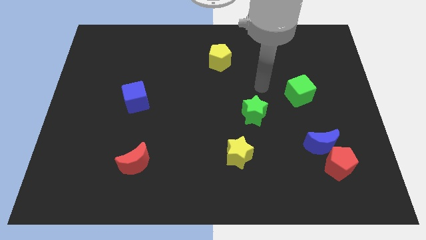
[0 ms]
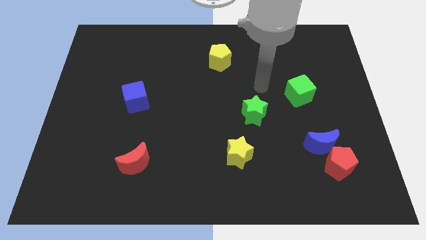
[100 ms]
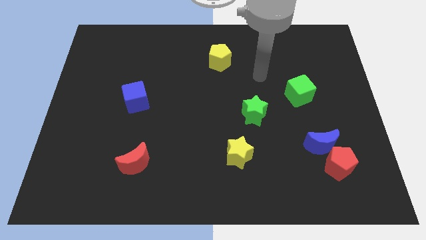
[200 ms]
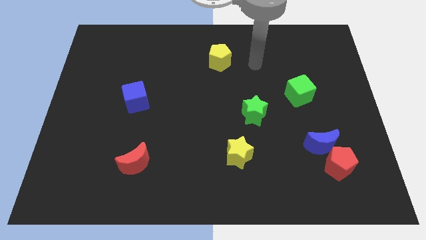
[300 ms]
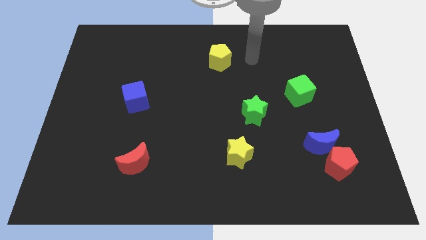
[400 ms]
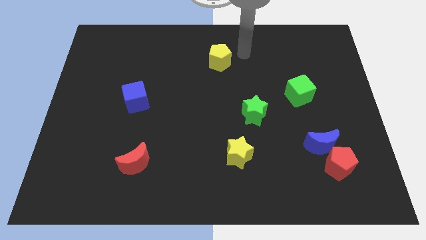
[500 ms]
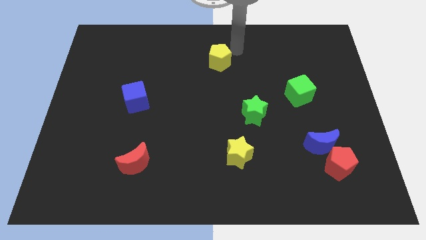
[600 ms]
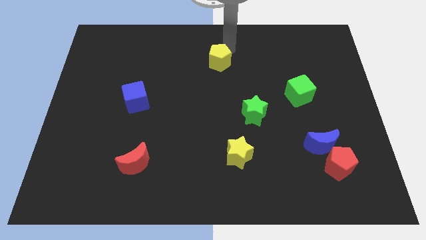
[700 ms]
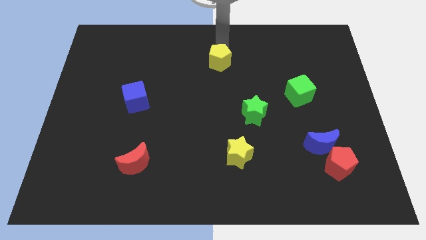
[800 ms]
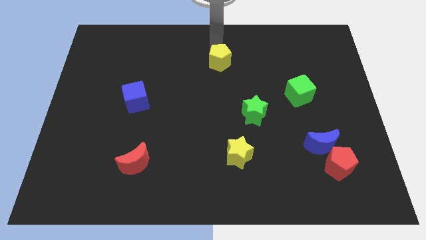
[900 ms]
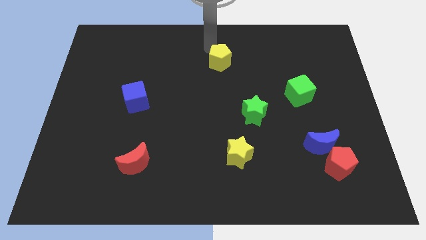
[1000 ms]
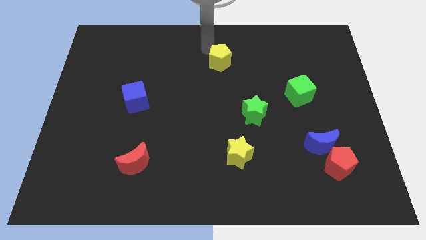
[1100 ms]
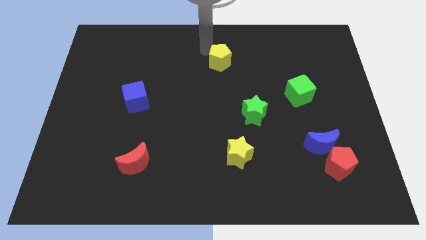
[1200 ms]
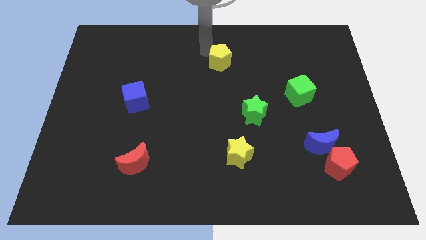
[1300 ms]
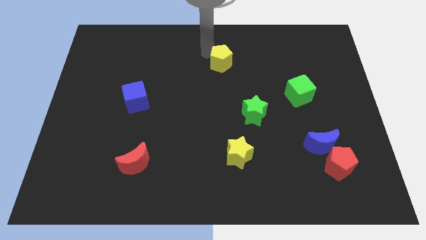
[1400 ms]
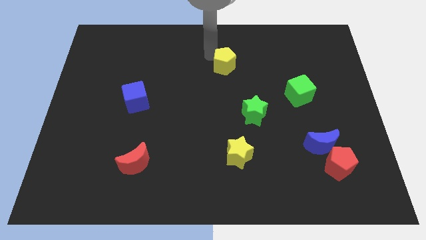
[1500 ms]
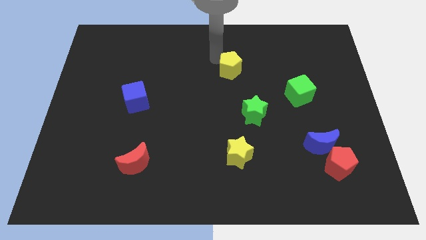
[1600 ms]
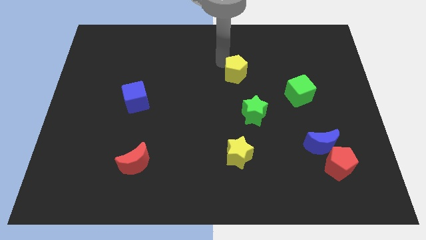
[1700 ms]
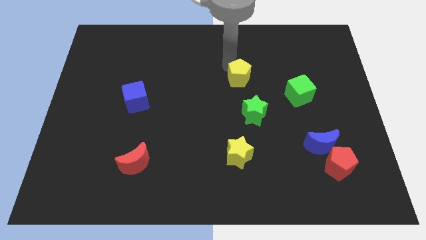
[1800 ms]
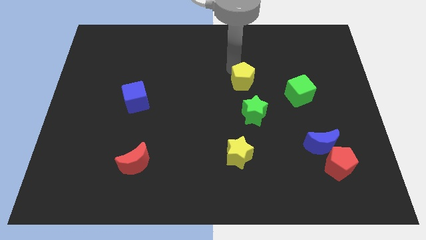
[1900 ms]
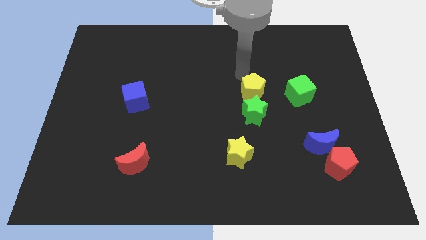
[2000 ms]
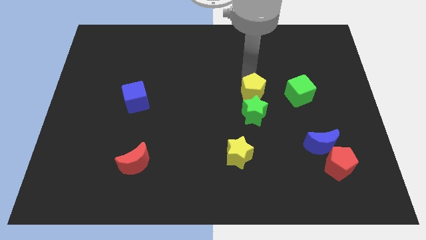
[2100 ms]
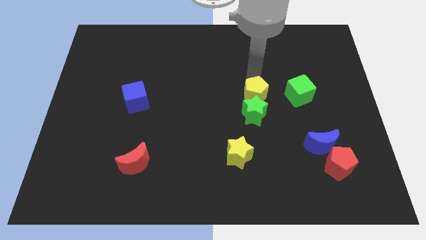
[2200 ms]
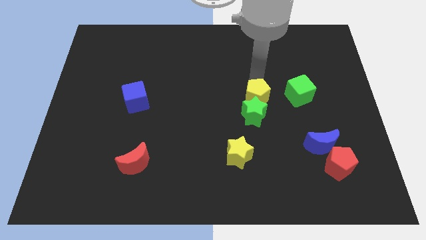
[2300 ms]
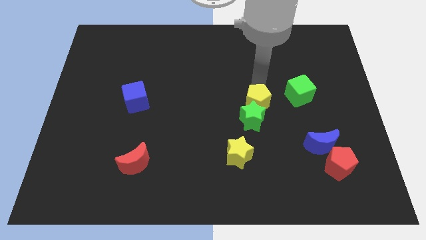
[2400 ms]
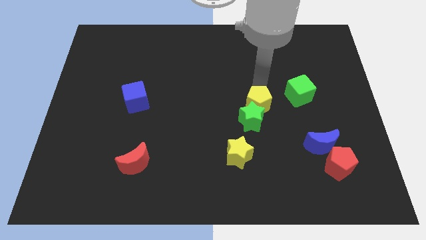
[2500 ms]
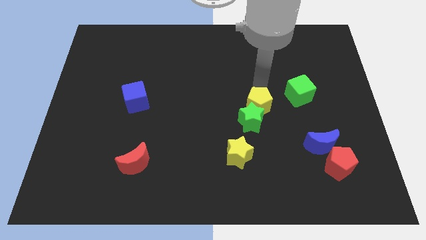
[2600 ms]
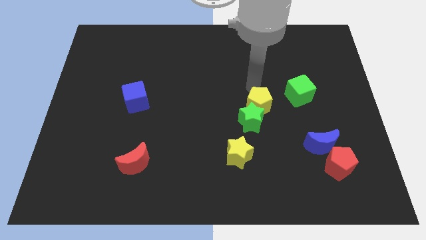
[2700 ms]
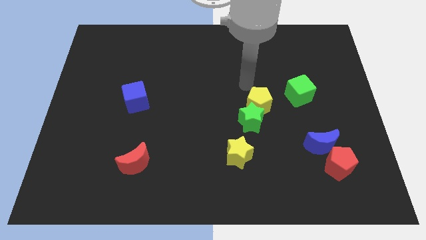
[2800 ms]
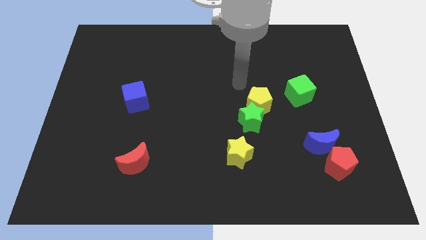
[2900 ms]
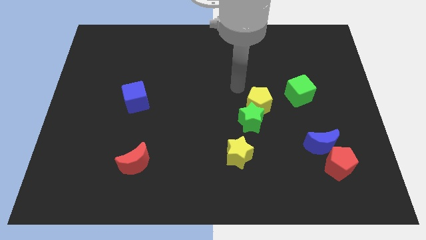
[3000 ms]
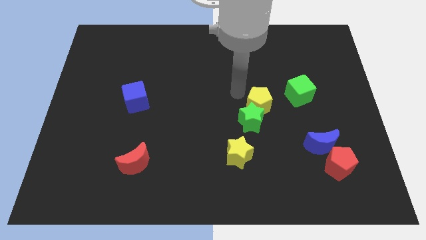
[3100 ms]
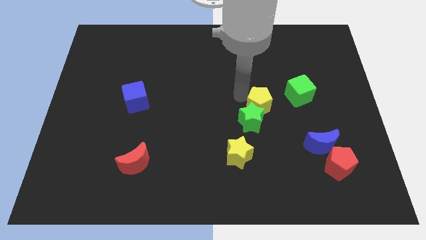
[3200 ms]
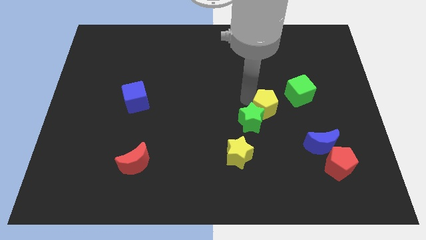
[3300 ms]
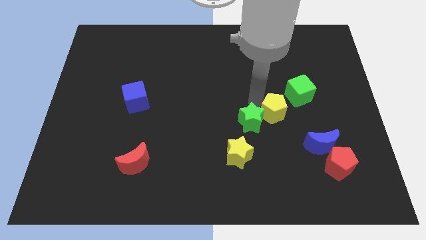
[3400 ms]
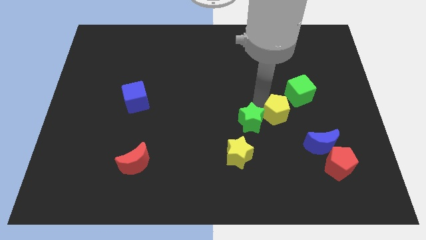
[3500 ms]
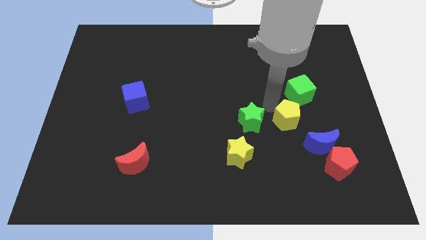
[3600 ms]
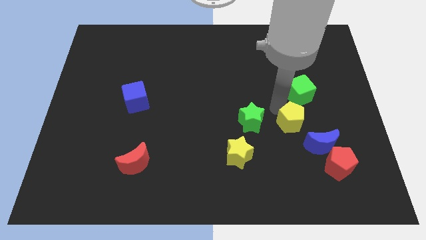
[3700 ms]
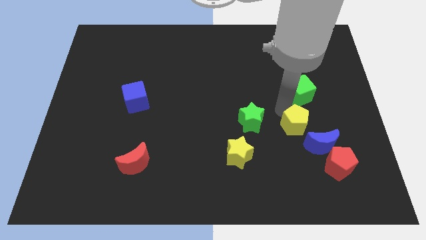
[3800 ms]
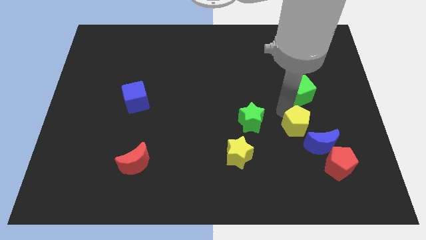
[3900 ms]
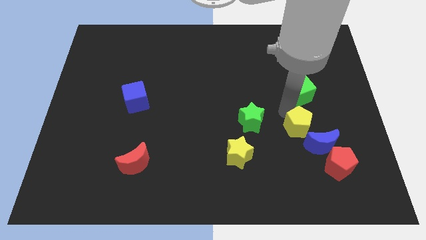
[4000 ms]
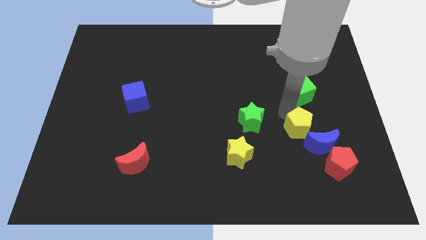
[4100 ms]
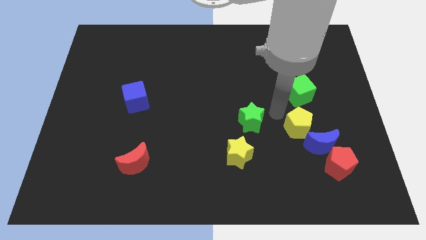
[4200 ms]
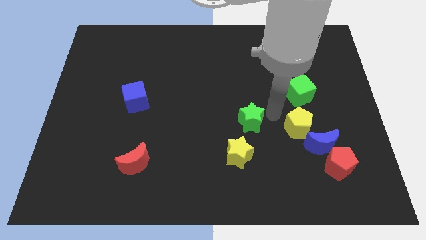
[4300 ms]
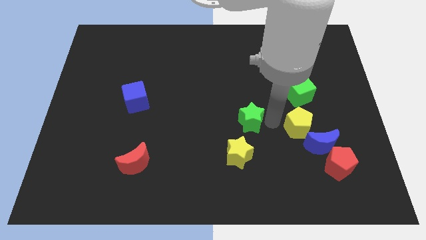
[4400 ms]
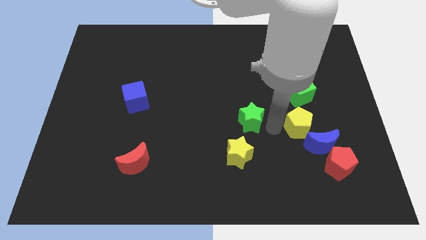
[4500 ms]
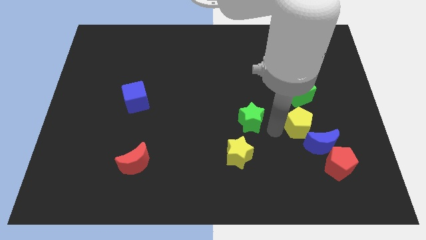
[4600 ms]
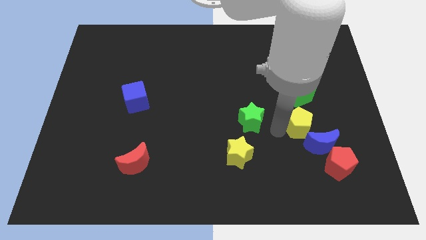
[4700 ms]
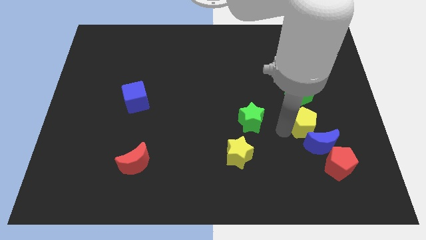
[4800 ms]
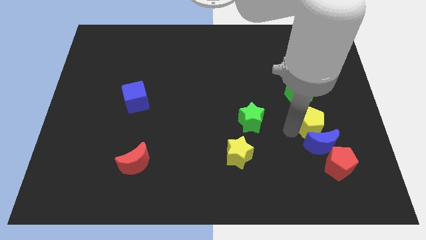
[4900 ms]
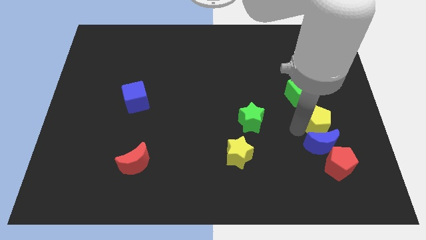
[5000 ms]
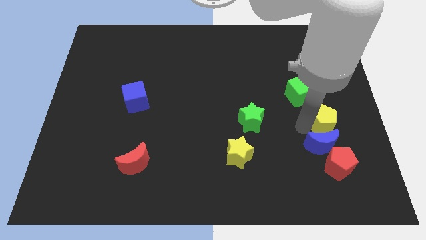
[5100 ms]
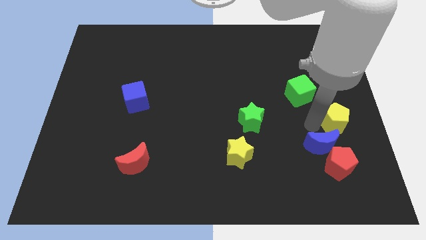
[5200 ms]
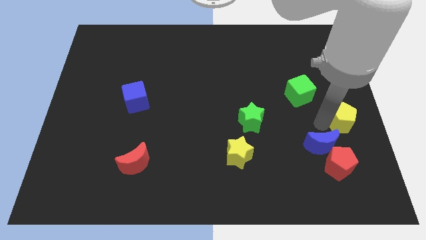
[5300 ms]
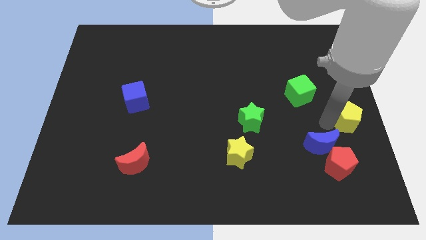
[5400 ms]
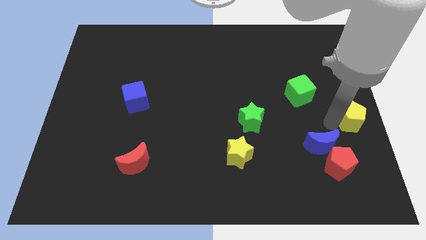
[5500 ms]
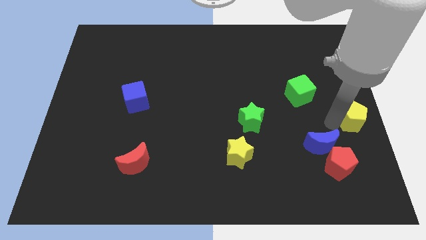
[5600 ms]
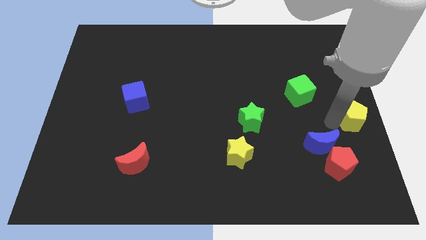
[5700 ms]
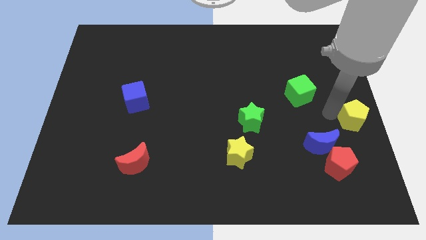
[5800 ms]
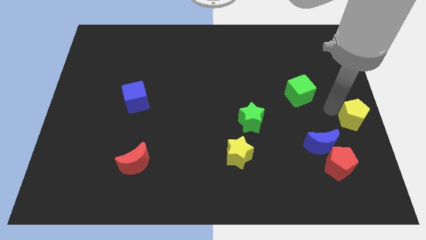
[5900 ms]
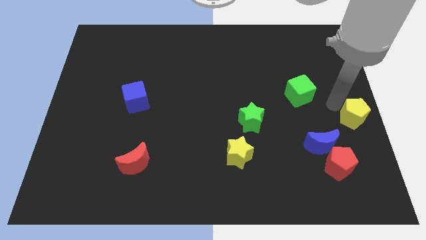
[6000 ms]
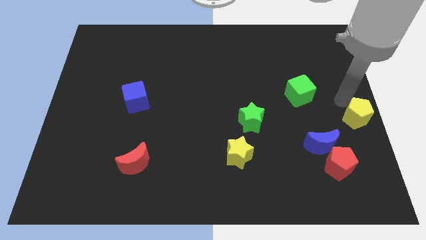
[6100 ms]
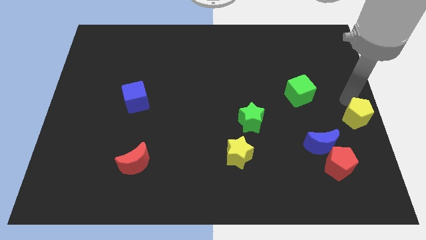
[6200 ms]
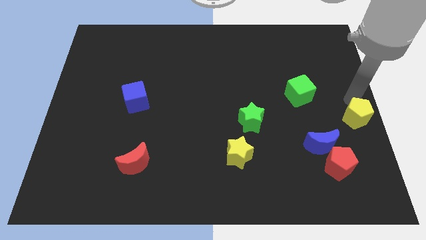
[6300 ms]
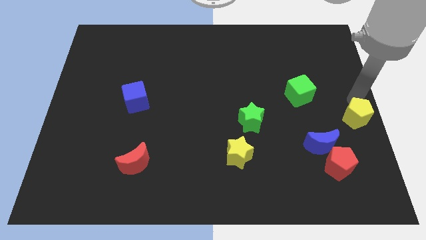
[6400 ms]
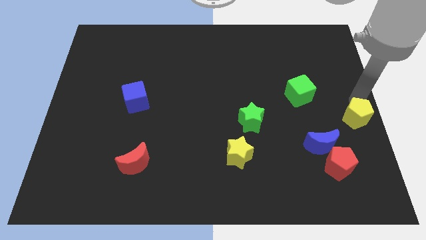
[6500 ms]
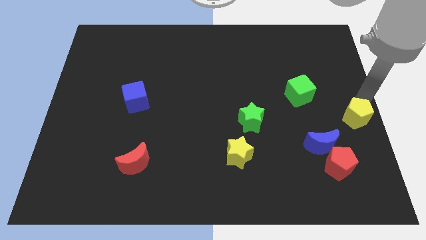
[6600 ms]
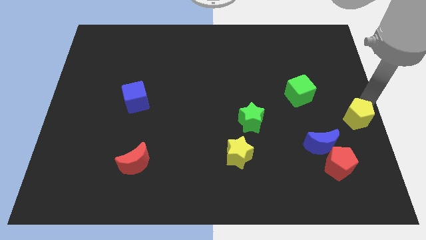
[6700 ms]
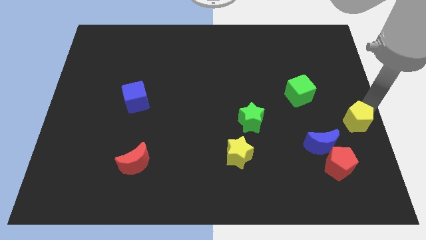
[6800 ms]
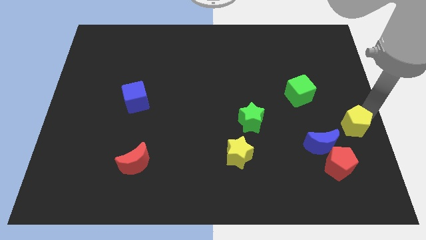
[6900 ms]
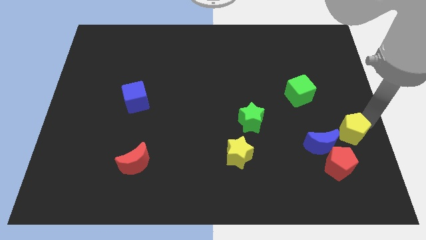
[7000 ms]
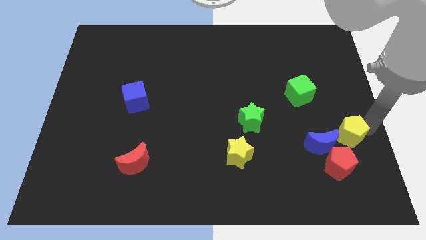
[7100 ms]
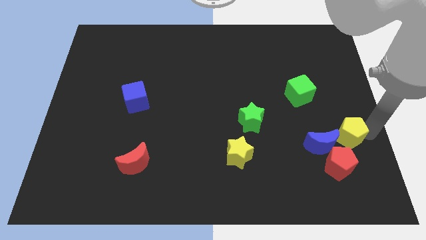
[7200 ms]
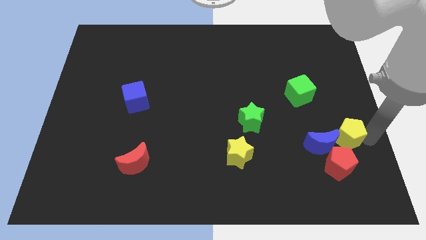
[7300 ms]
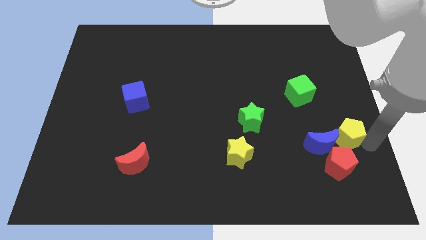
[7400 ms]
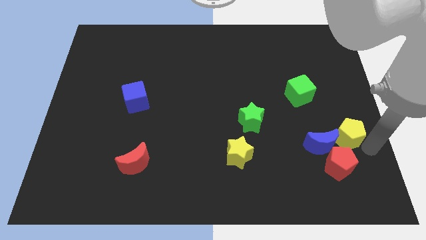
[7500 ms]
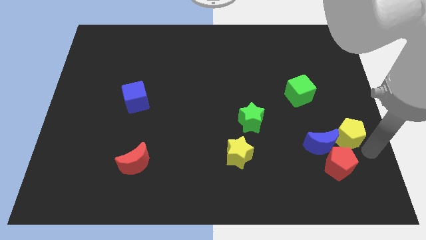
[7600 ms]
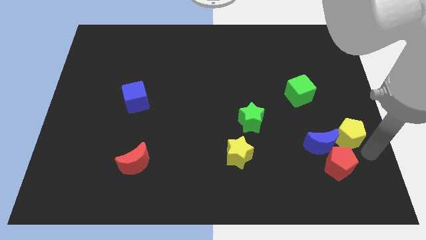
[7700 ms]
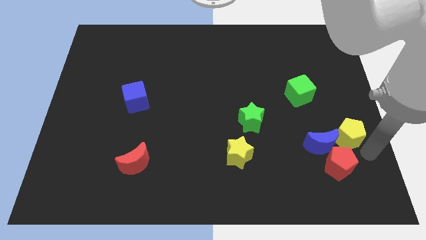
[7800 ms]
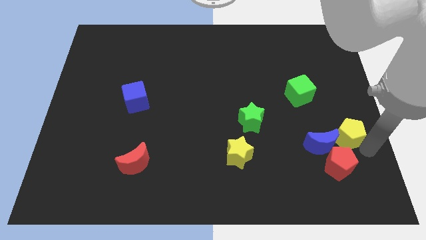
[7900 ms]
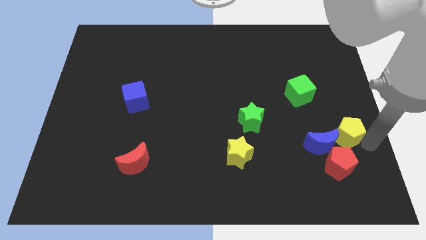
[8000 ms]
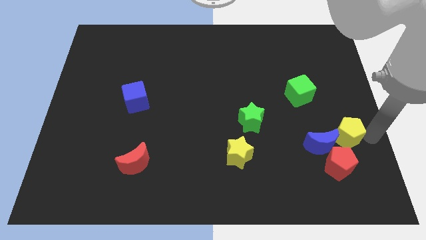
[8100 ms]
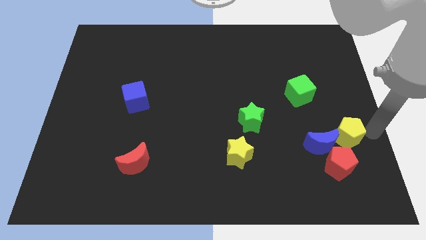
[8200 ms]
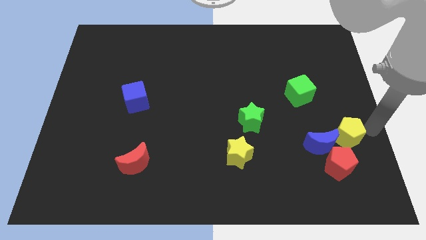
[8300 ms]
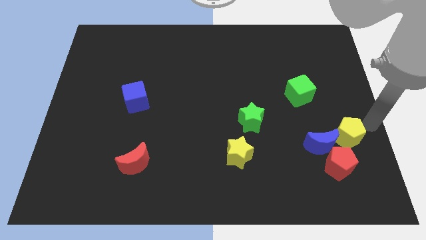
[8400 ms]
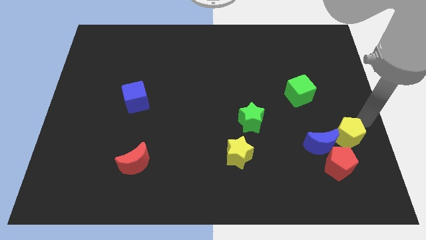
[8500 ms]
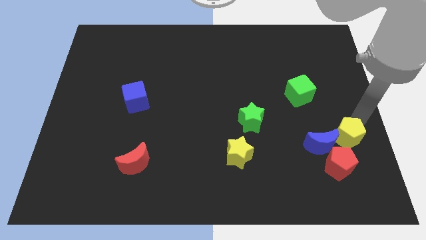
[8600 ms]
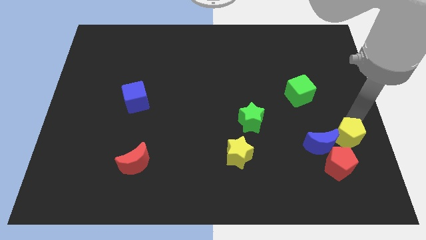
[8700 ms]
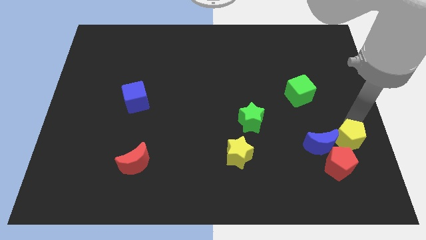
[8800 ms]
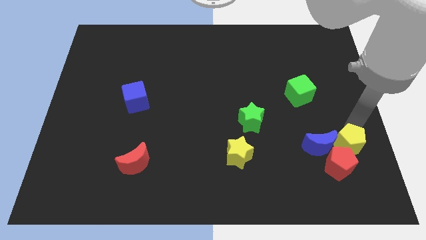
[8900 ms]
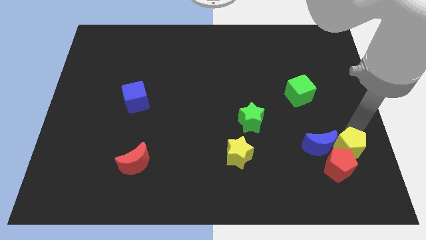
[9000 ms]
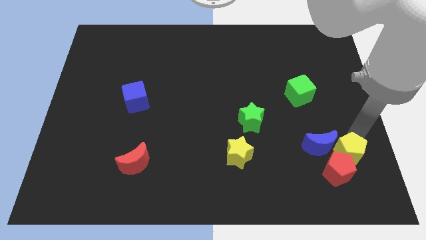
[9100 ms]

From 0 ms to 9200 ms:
put the yellow pentagon next to the red pentagon
